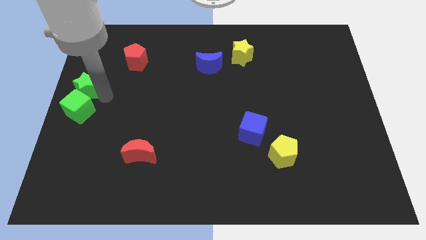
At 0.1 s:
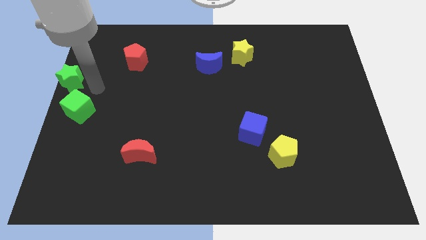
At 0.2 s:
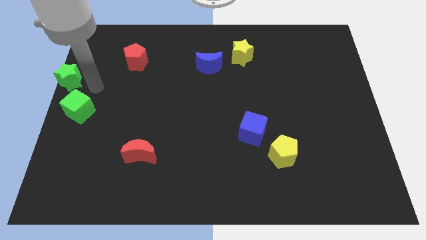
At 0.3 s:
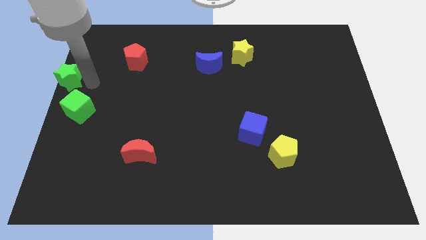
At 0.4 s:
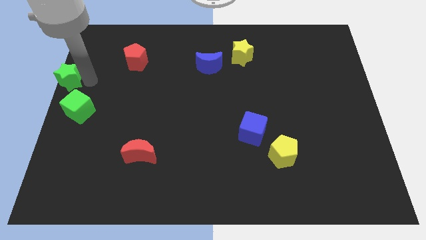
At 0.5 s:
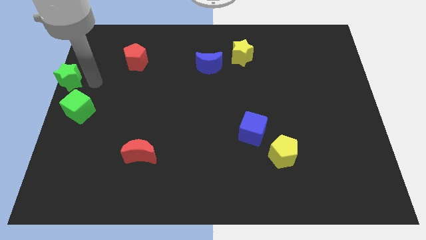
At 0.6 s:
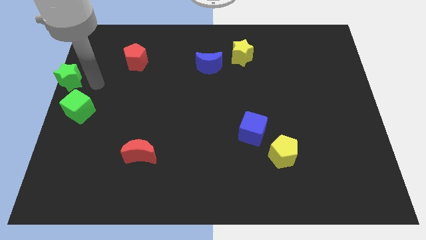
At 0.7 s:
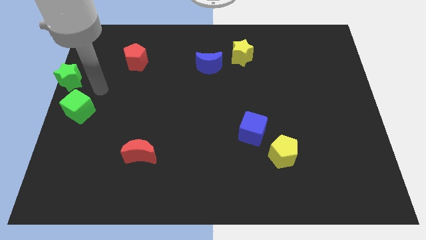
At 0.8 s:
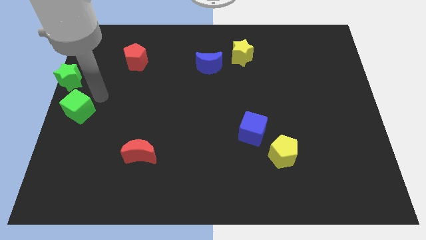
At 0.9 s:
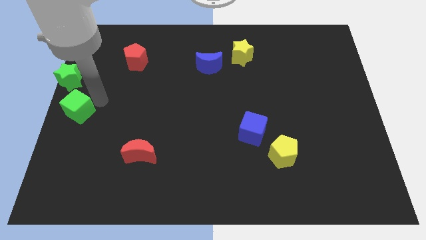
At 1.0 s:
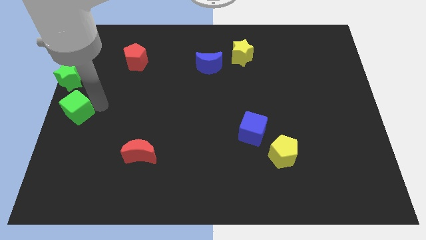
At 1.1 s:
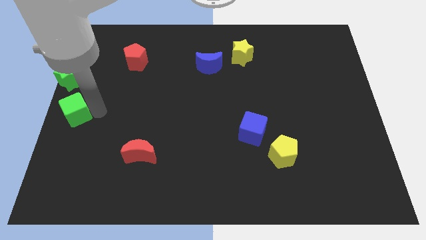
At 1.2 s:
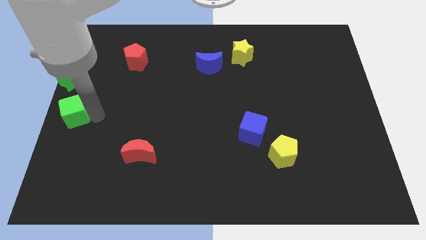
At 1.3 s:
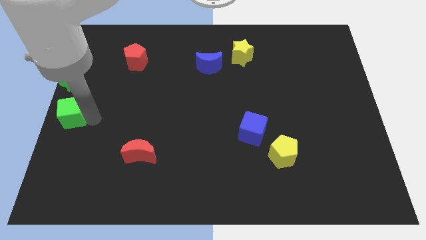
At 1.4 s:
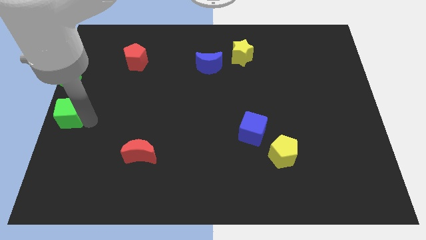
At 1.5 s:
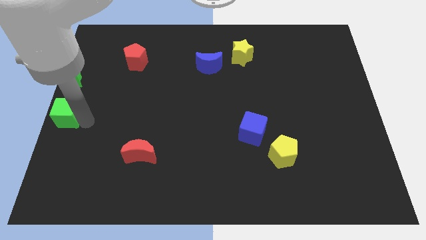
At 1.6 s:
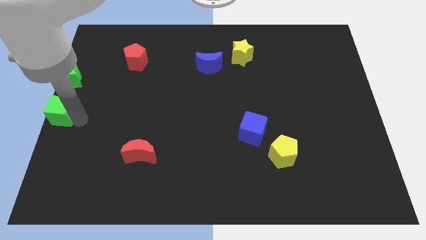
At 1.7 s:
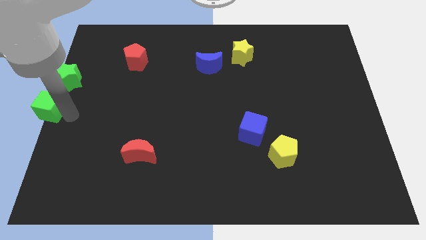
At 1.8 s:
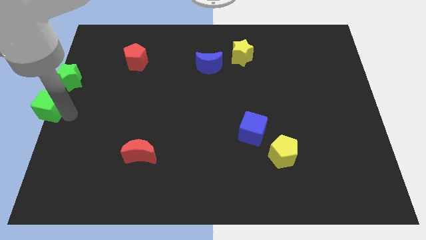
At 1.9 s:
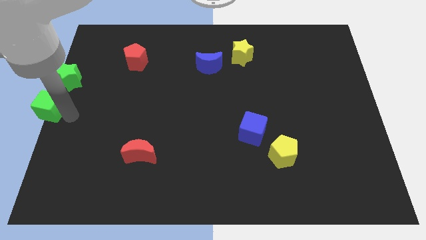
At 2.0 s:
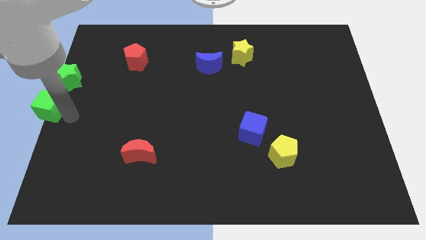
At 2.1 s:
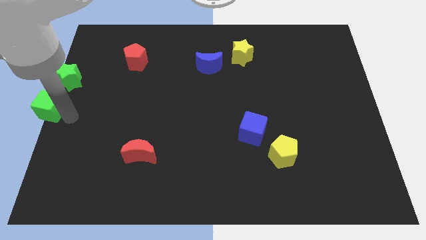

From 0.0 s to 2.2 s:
separate green star and the green cube

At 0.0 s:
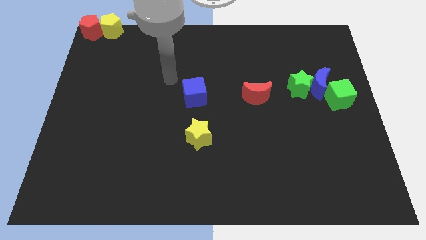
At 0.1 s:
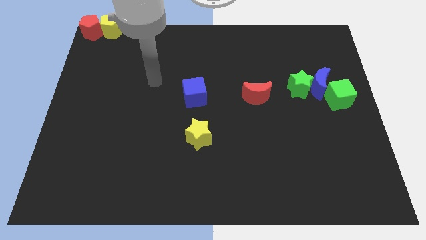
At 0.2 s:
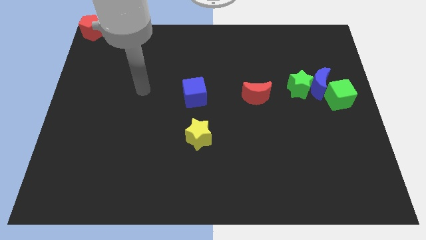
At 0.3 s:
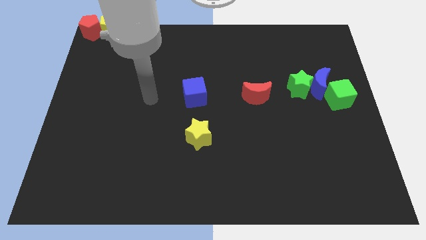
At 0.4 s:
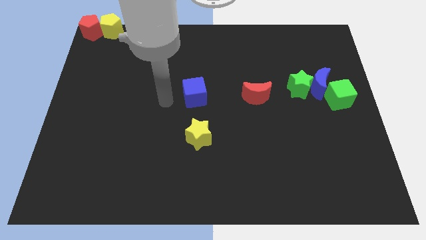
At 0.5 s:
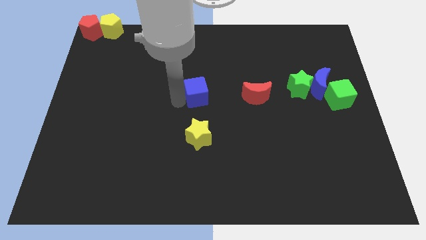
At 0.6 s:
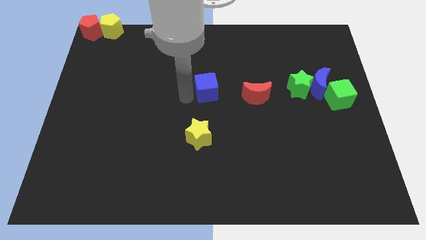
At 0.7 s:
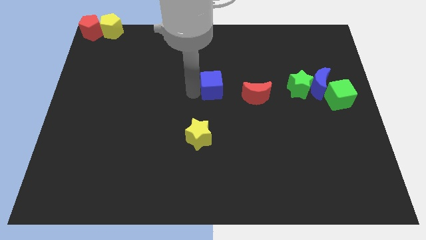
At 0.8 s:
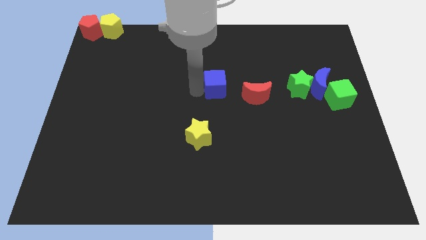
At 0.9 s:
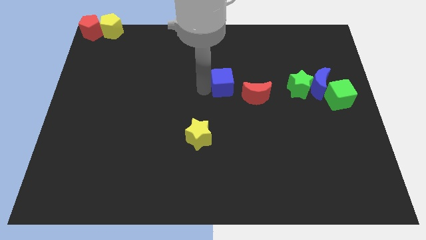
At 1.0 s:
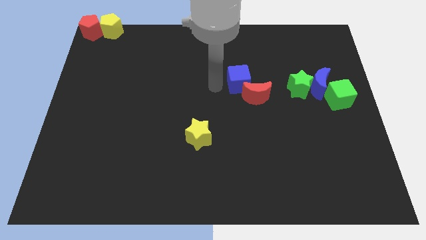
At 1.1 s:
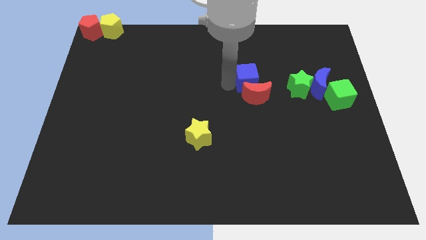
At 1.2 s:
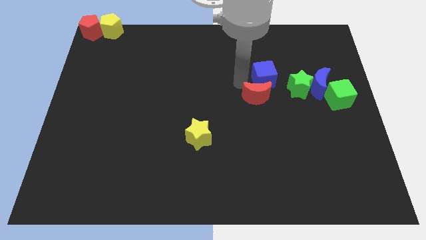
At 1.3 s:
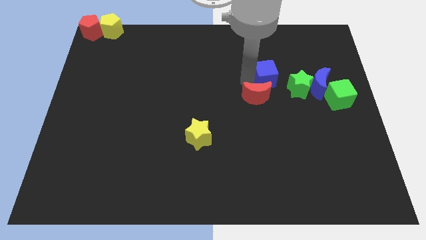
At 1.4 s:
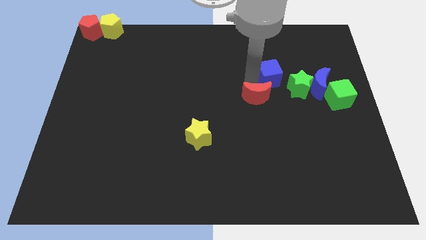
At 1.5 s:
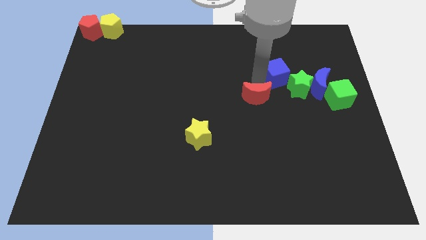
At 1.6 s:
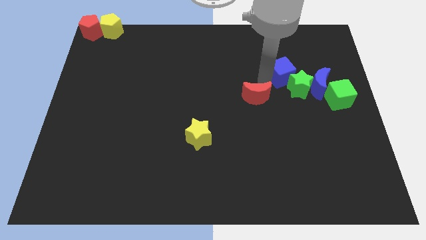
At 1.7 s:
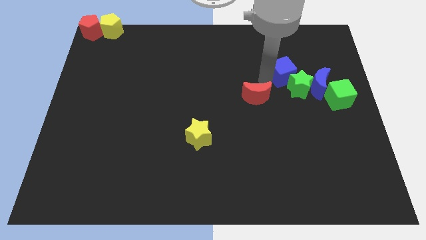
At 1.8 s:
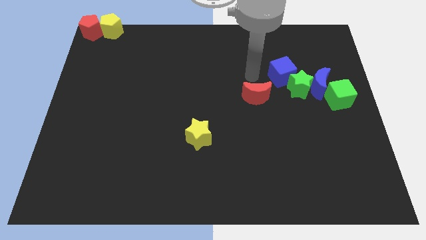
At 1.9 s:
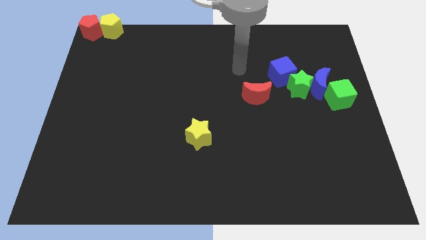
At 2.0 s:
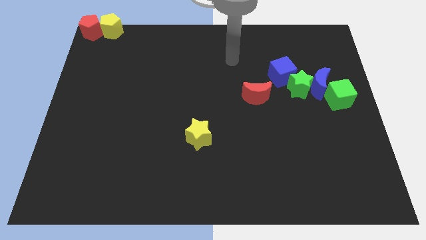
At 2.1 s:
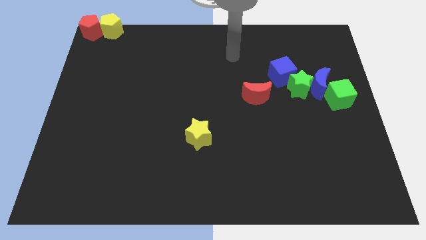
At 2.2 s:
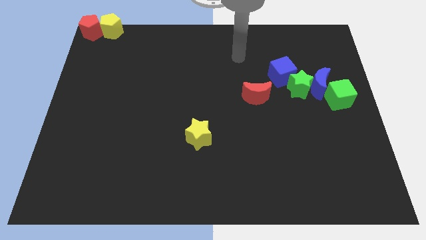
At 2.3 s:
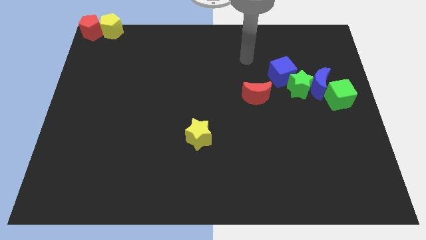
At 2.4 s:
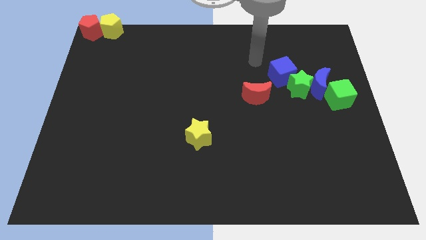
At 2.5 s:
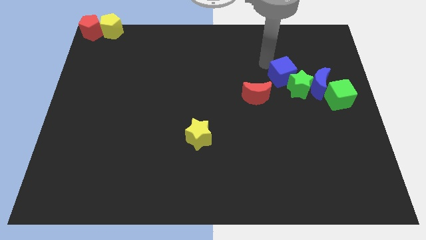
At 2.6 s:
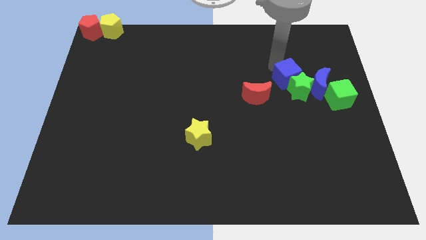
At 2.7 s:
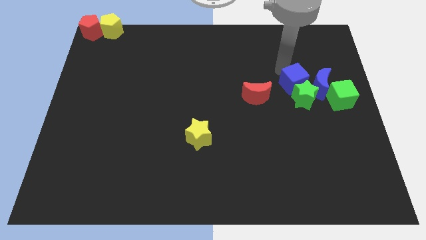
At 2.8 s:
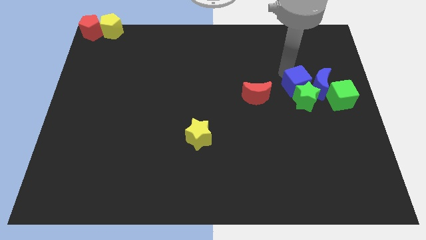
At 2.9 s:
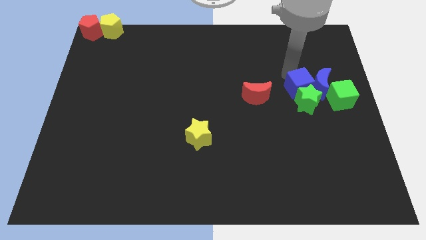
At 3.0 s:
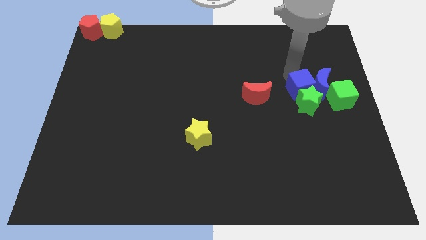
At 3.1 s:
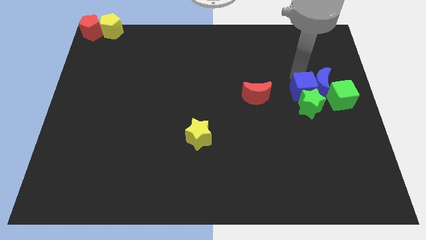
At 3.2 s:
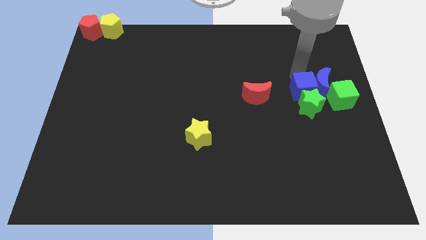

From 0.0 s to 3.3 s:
push blue cube in to green star

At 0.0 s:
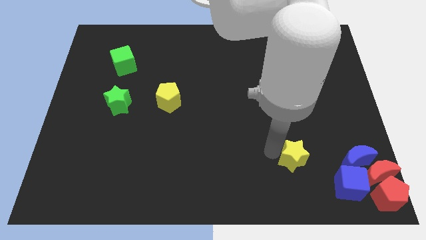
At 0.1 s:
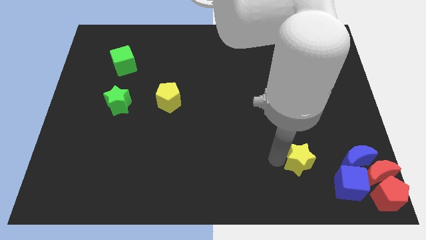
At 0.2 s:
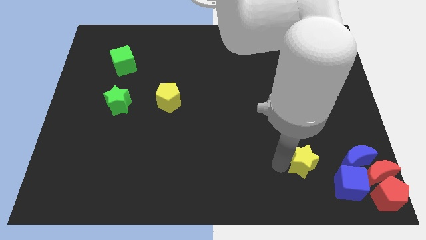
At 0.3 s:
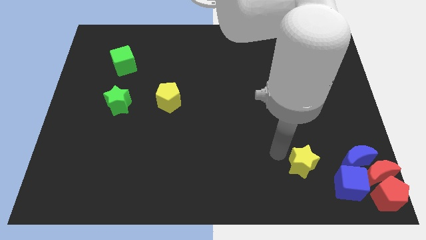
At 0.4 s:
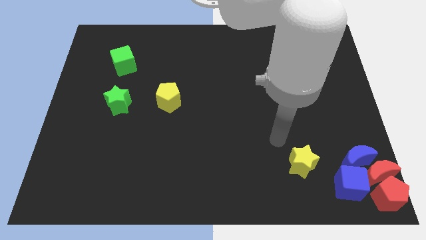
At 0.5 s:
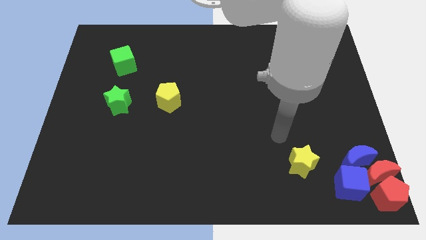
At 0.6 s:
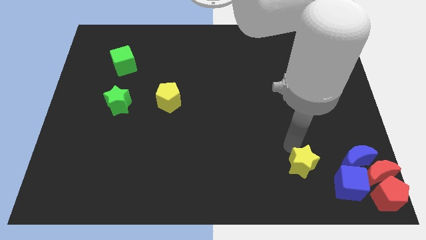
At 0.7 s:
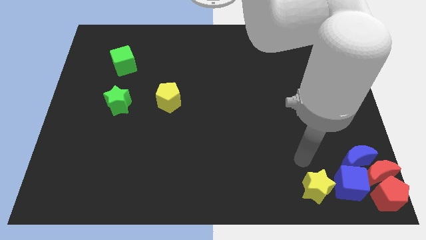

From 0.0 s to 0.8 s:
push the yellow star to the left of the blue cube

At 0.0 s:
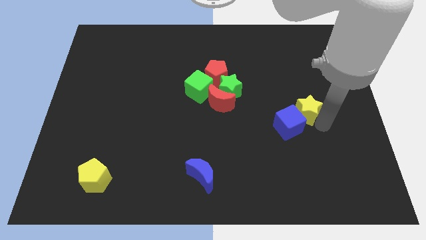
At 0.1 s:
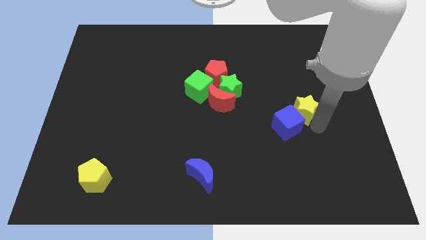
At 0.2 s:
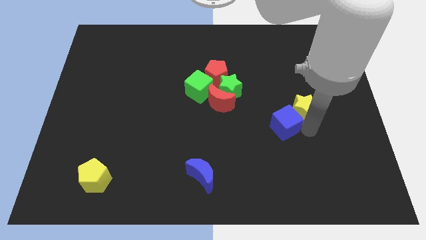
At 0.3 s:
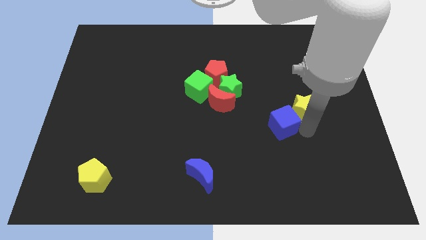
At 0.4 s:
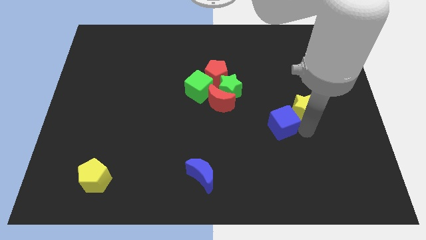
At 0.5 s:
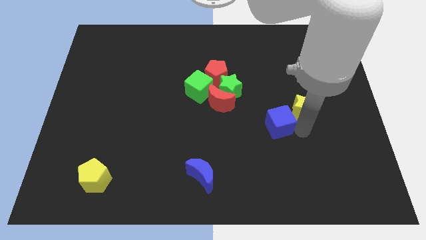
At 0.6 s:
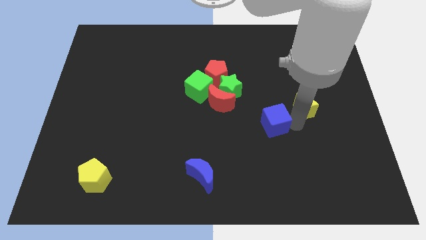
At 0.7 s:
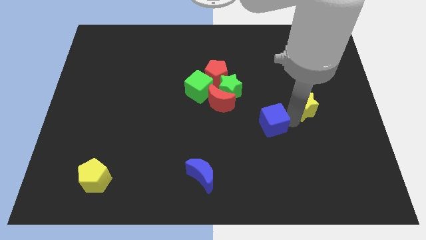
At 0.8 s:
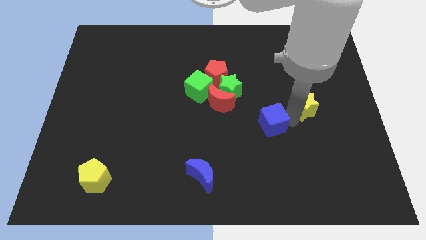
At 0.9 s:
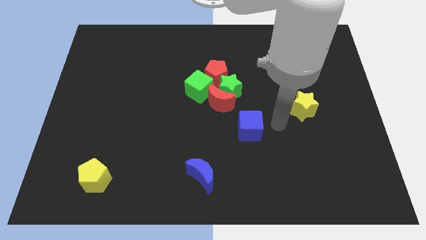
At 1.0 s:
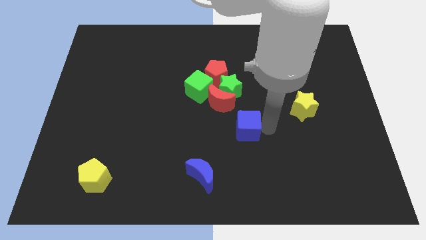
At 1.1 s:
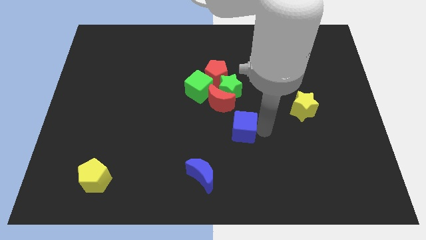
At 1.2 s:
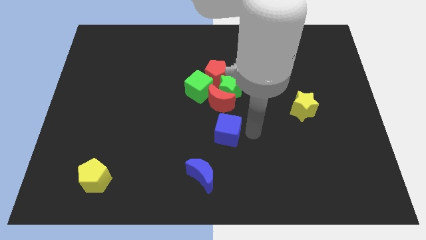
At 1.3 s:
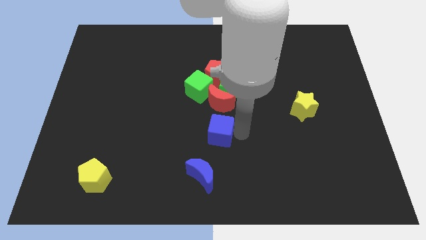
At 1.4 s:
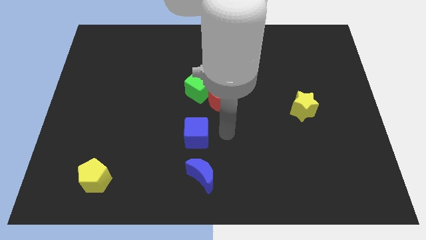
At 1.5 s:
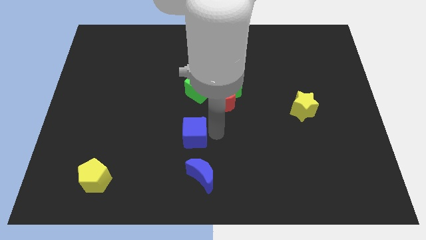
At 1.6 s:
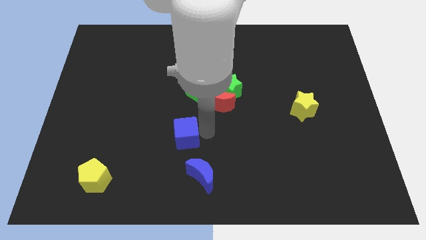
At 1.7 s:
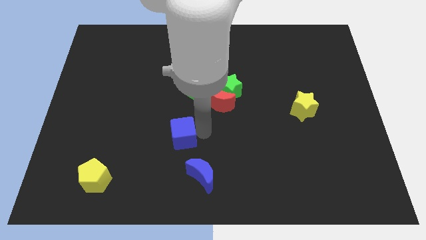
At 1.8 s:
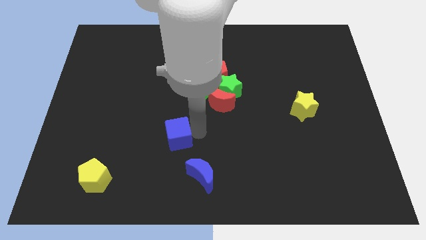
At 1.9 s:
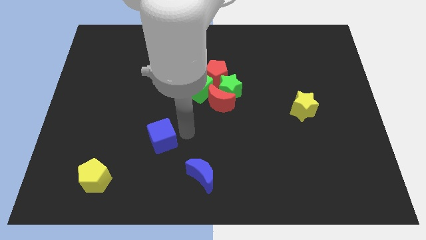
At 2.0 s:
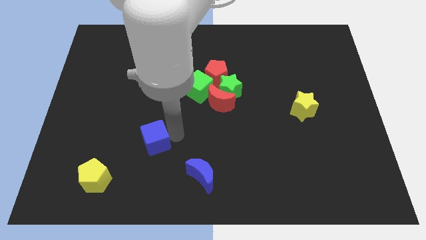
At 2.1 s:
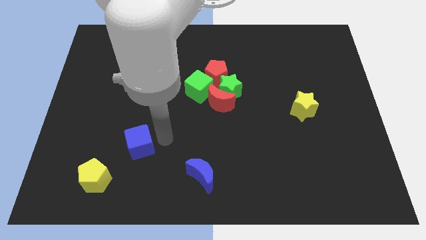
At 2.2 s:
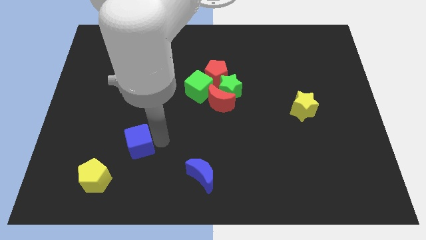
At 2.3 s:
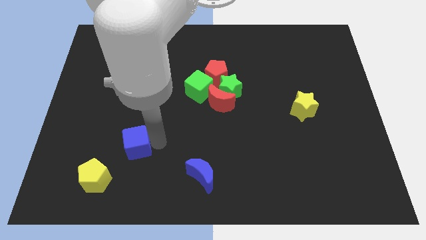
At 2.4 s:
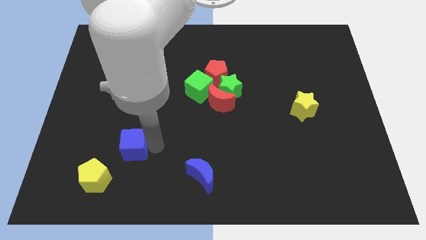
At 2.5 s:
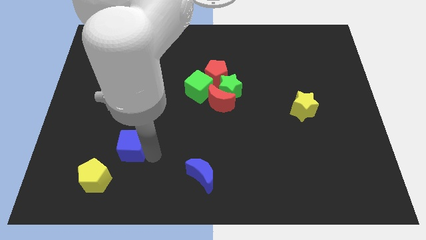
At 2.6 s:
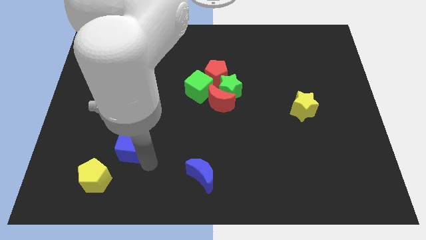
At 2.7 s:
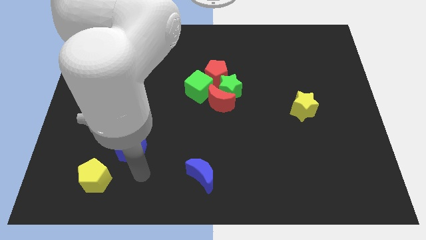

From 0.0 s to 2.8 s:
move the blue cube to the top right of the yellow pentagon
